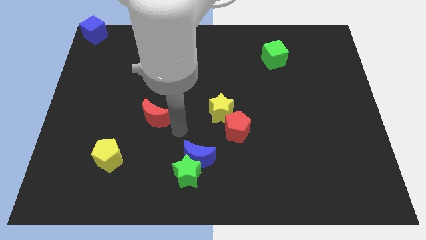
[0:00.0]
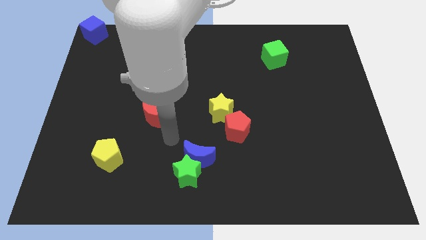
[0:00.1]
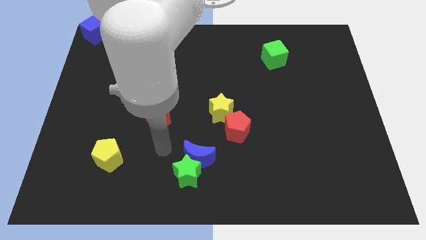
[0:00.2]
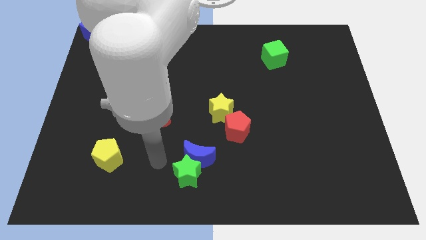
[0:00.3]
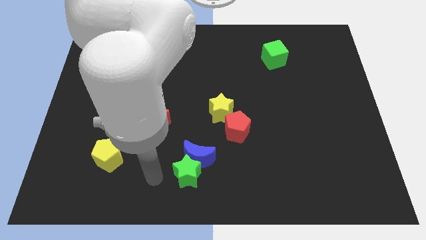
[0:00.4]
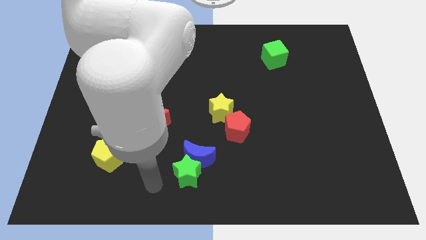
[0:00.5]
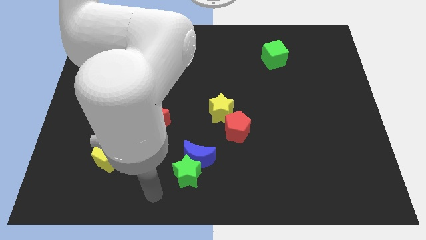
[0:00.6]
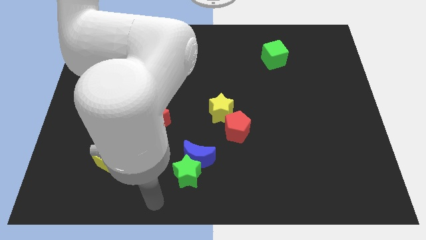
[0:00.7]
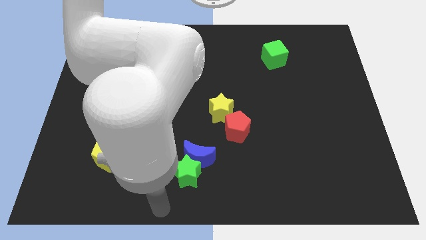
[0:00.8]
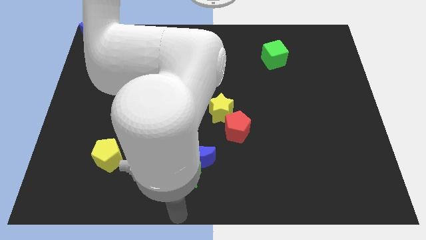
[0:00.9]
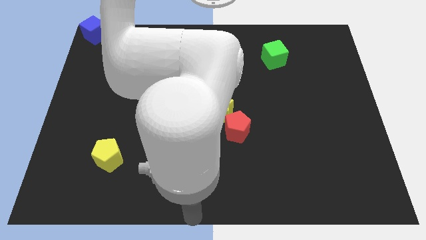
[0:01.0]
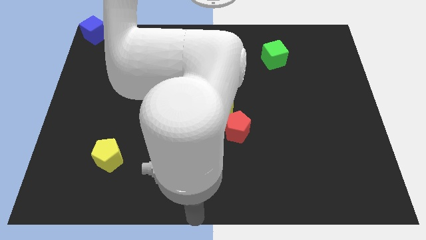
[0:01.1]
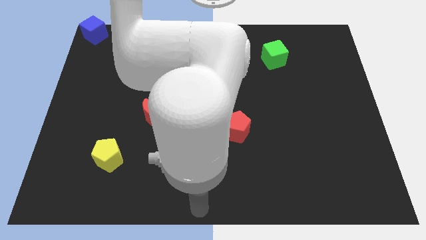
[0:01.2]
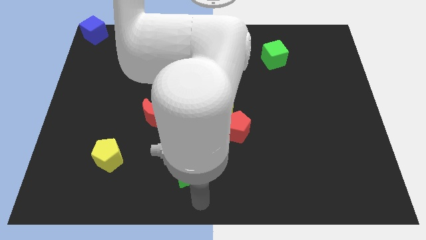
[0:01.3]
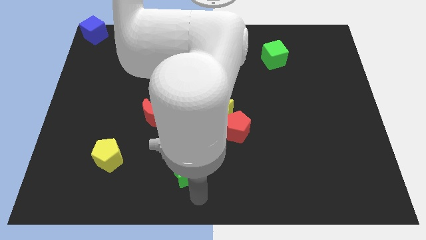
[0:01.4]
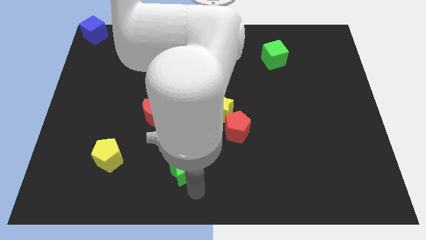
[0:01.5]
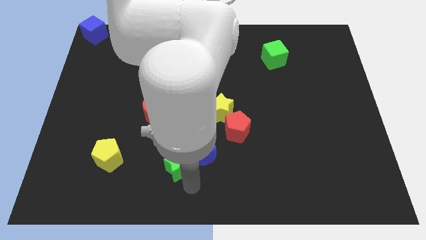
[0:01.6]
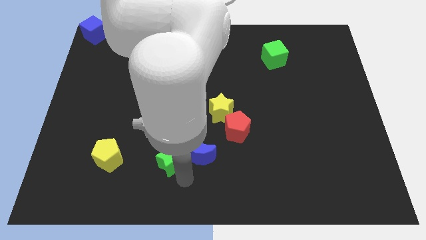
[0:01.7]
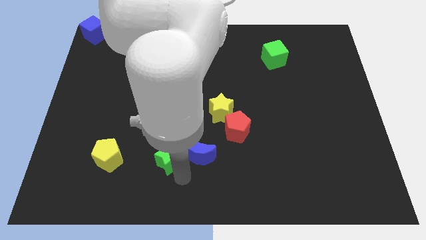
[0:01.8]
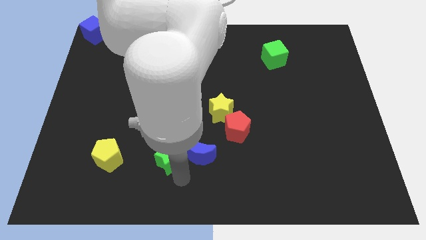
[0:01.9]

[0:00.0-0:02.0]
place the green star left of blue crescent

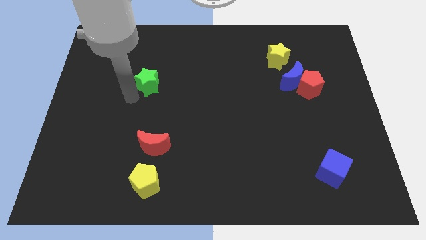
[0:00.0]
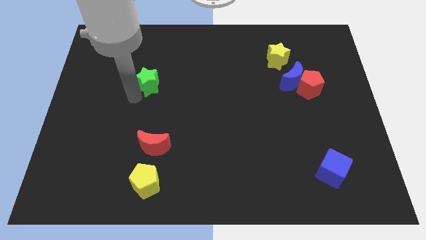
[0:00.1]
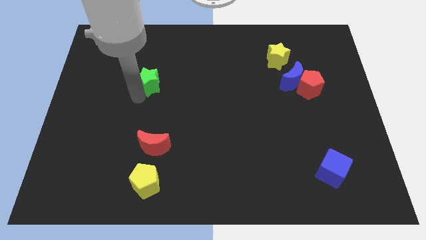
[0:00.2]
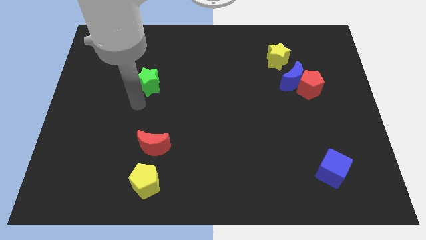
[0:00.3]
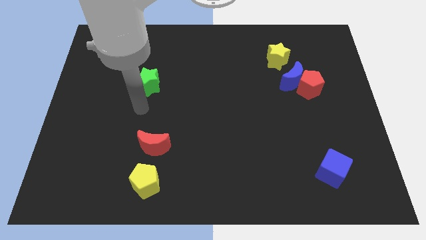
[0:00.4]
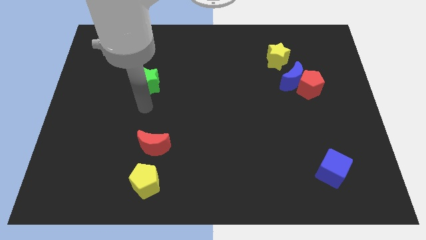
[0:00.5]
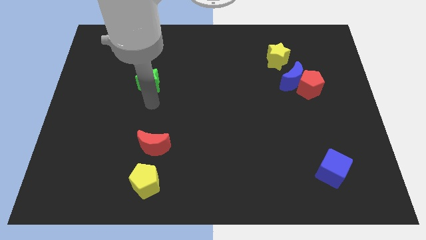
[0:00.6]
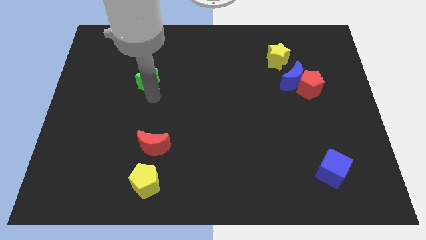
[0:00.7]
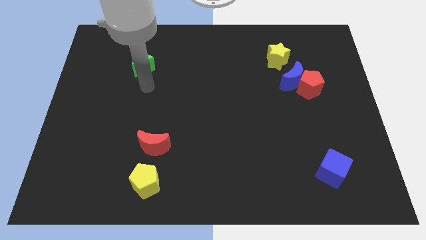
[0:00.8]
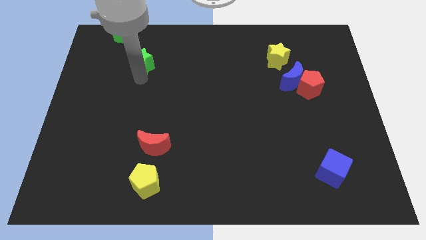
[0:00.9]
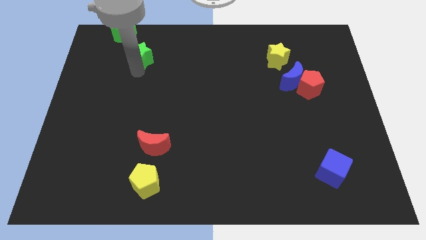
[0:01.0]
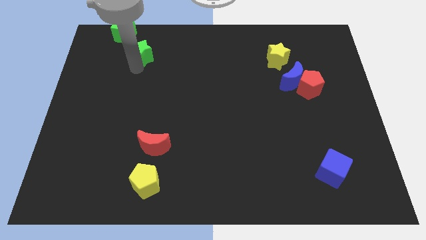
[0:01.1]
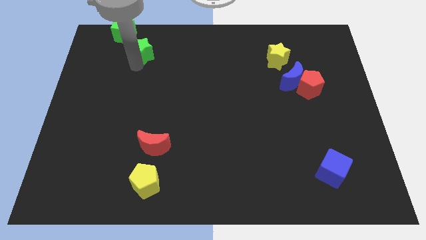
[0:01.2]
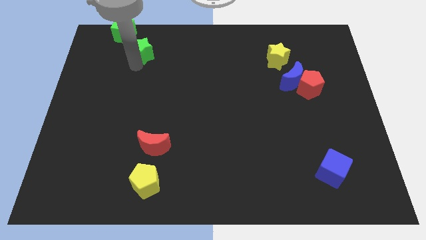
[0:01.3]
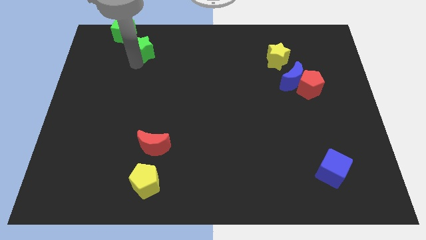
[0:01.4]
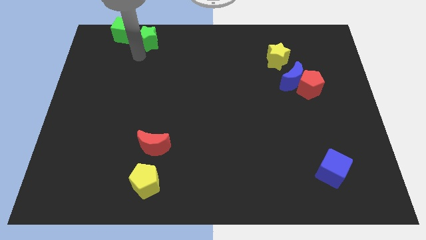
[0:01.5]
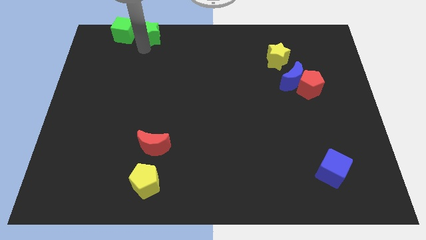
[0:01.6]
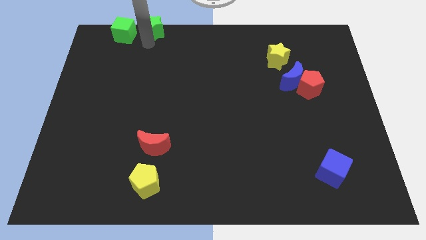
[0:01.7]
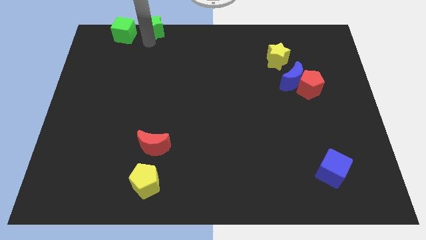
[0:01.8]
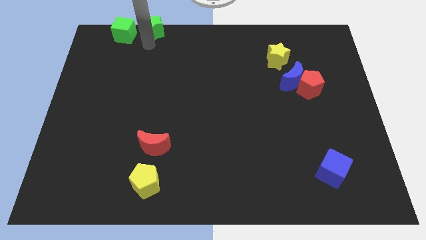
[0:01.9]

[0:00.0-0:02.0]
place the green star to right side of the green cube

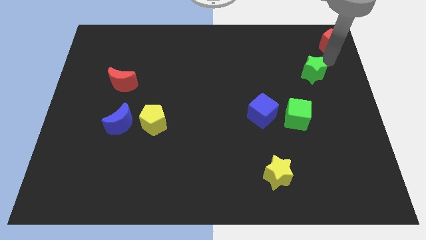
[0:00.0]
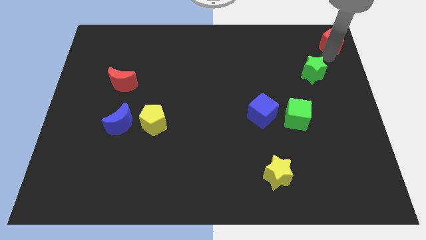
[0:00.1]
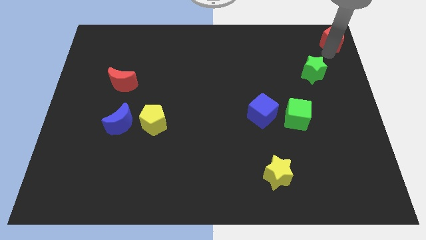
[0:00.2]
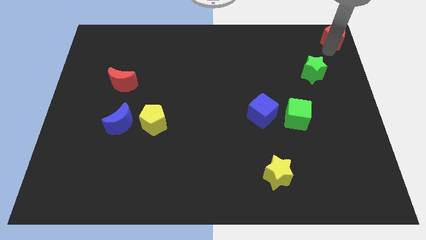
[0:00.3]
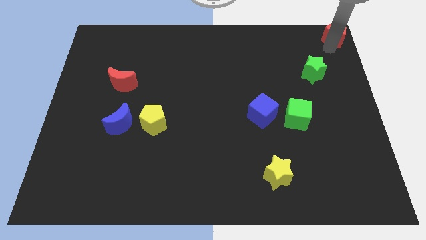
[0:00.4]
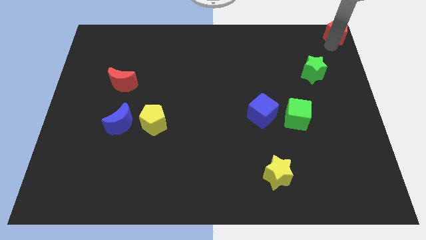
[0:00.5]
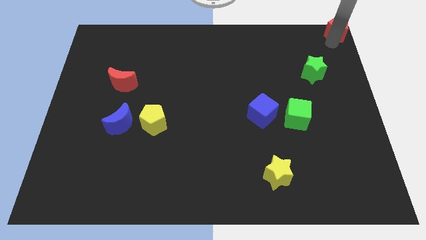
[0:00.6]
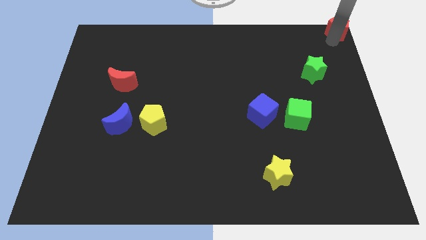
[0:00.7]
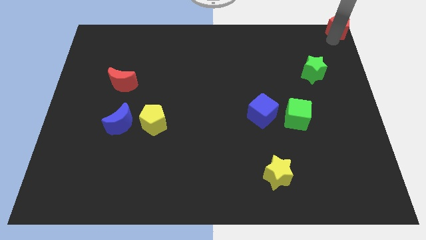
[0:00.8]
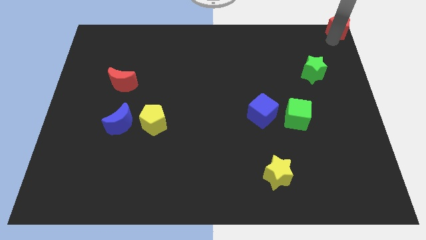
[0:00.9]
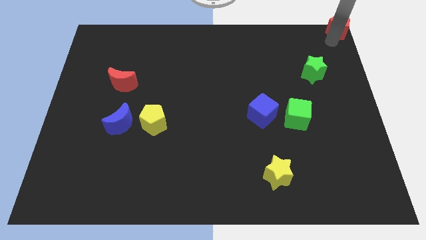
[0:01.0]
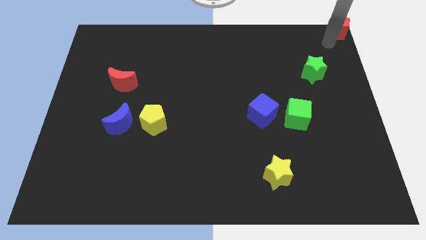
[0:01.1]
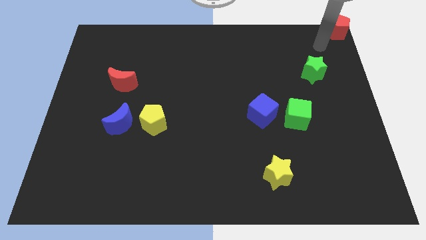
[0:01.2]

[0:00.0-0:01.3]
place the red pentagon to the top right corner

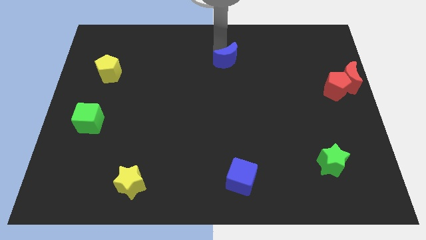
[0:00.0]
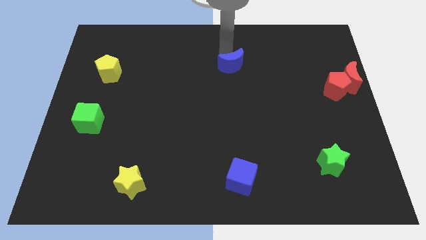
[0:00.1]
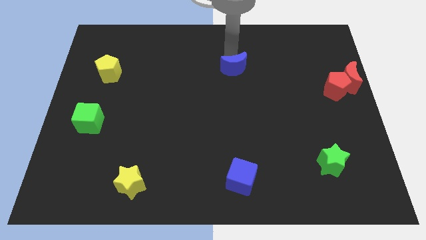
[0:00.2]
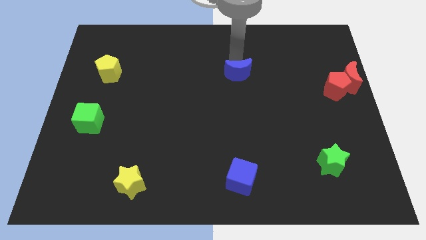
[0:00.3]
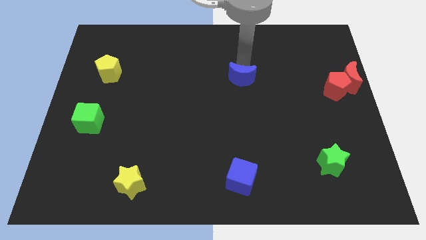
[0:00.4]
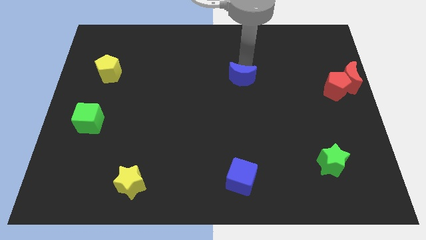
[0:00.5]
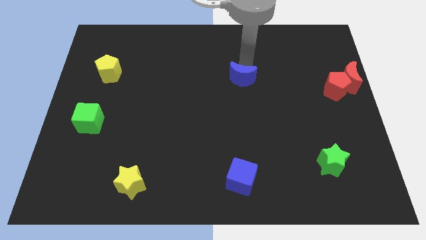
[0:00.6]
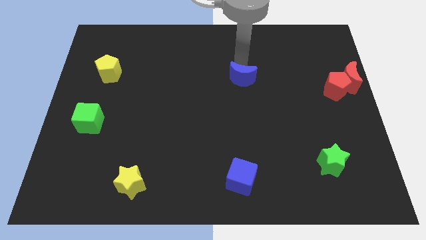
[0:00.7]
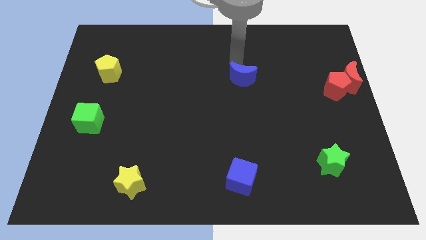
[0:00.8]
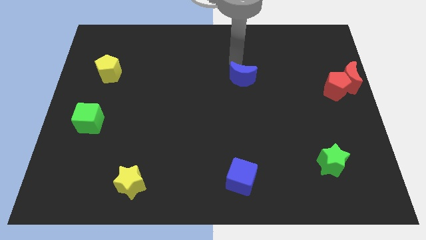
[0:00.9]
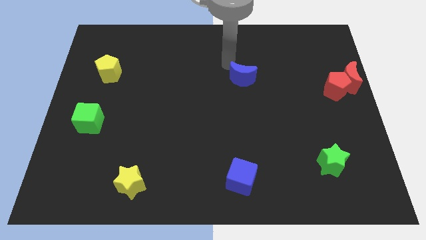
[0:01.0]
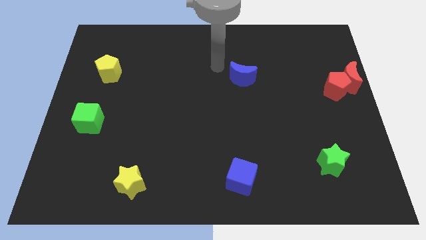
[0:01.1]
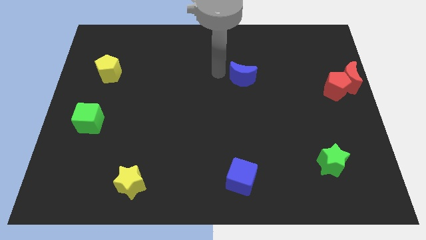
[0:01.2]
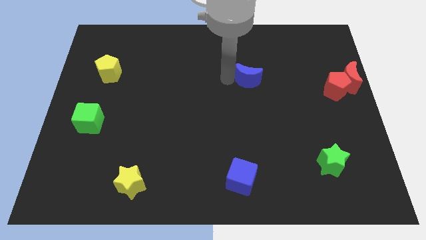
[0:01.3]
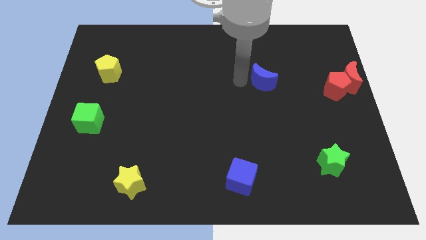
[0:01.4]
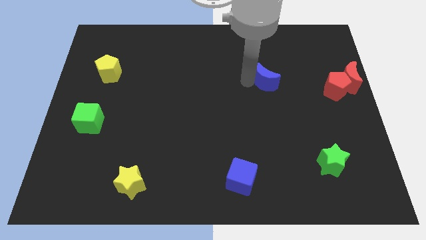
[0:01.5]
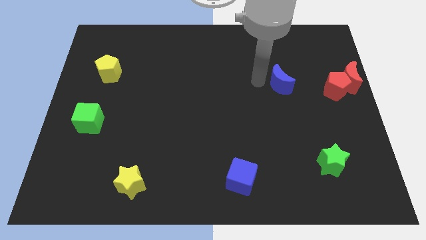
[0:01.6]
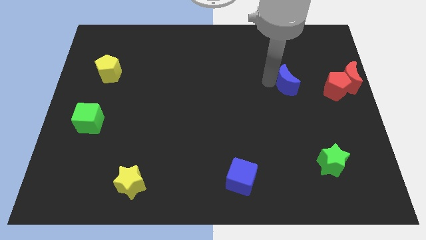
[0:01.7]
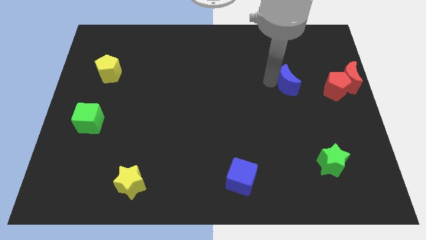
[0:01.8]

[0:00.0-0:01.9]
push the blue crescent left to the red pentagon

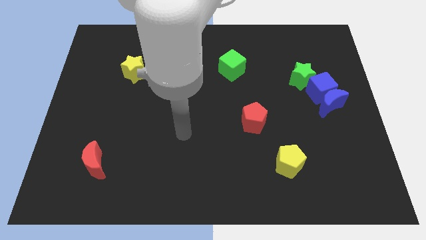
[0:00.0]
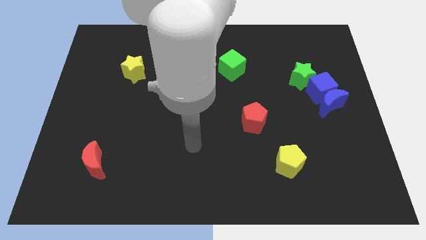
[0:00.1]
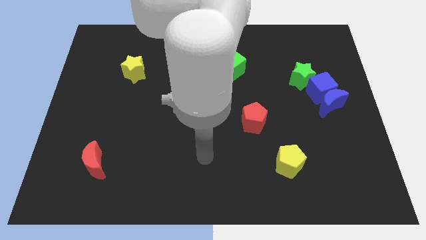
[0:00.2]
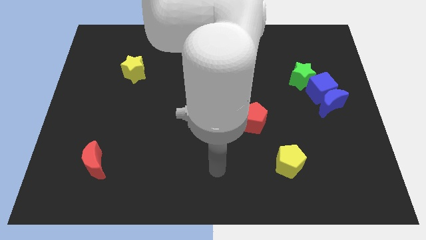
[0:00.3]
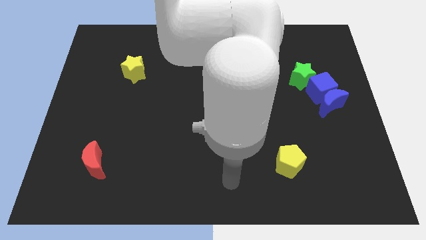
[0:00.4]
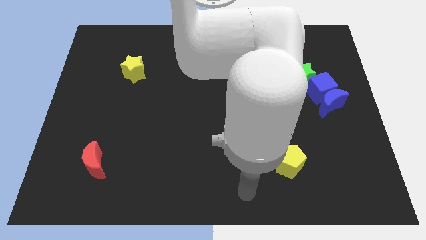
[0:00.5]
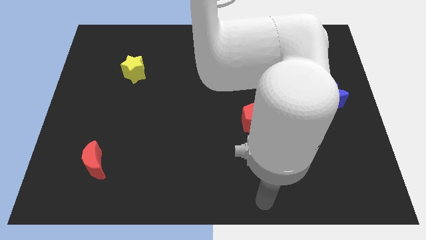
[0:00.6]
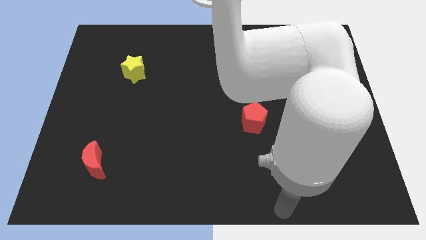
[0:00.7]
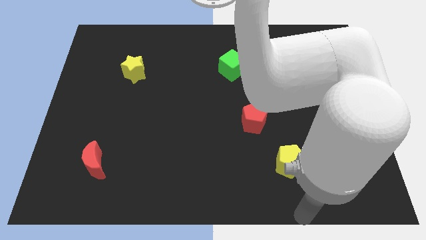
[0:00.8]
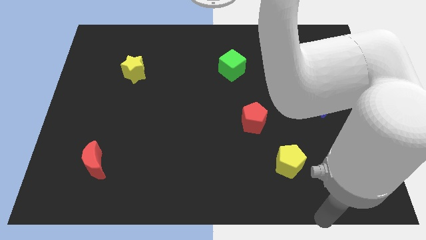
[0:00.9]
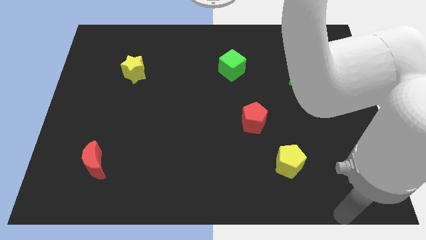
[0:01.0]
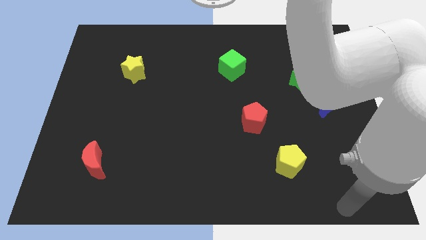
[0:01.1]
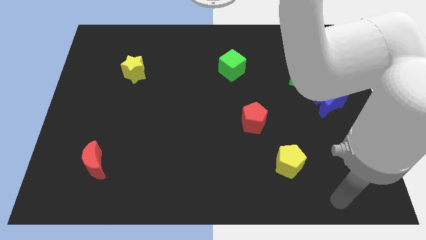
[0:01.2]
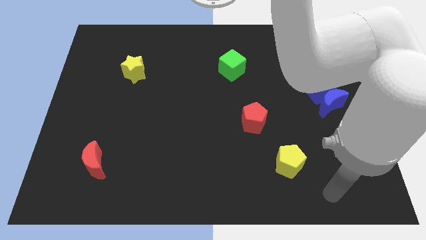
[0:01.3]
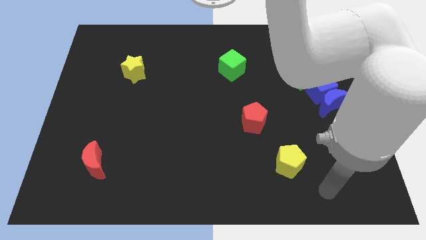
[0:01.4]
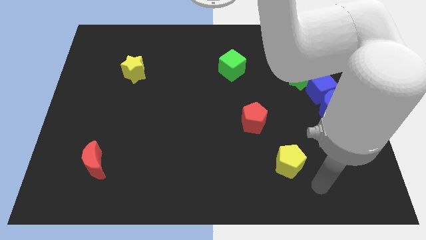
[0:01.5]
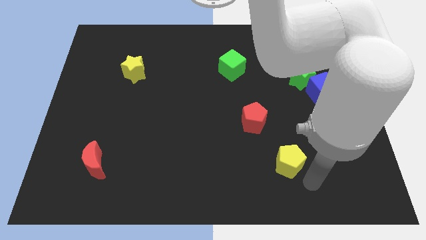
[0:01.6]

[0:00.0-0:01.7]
move your arm towards the yellow pentagon
